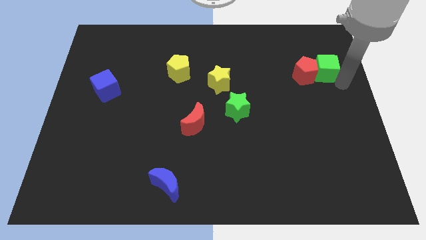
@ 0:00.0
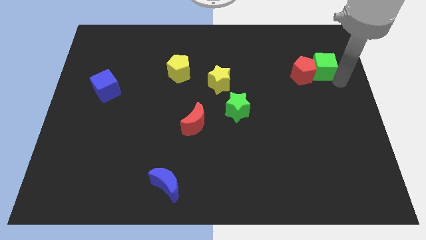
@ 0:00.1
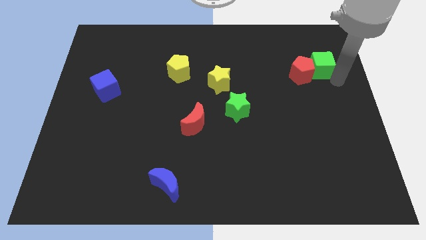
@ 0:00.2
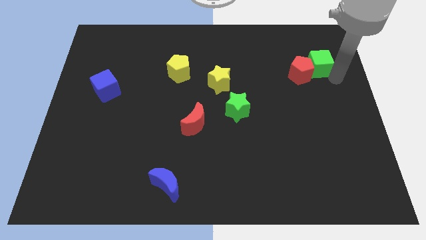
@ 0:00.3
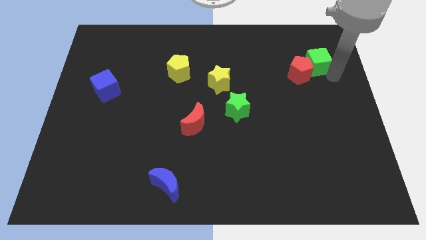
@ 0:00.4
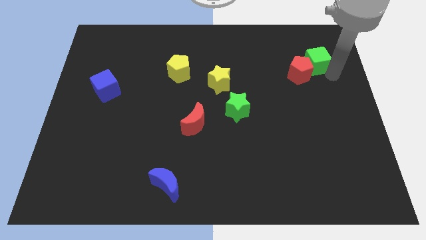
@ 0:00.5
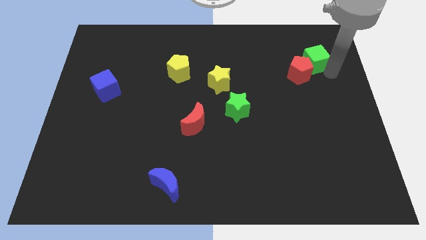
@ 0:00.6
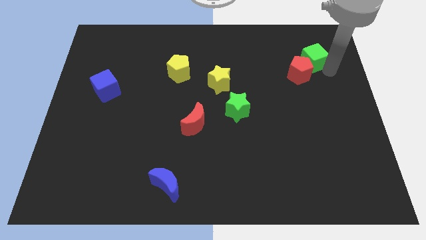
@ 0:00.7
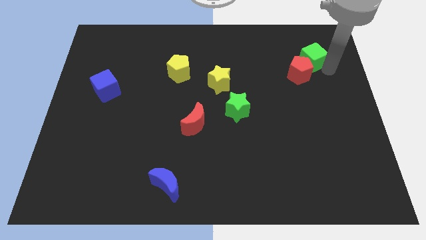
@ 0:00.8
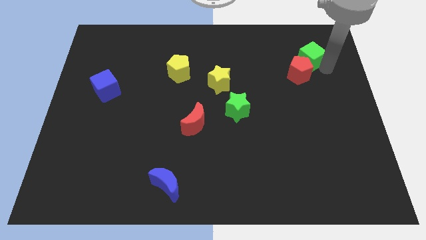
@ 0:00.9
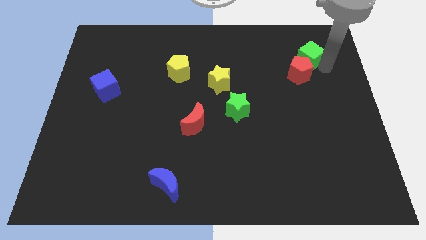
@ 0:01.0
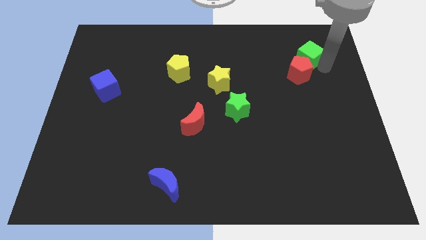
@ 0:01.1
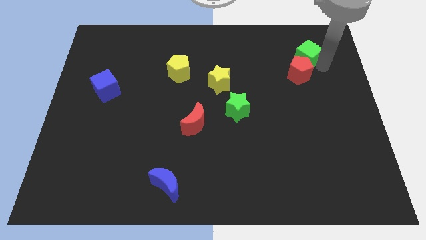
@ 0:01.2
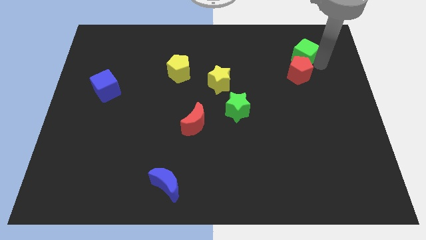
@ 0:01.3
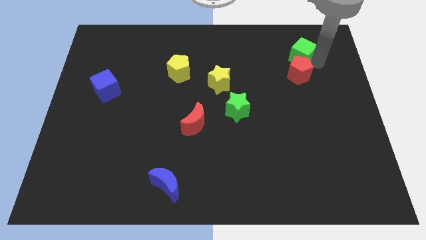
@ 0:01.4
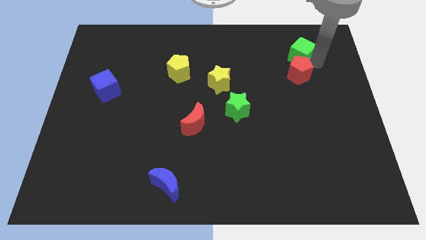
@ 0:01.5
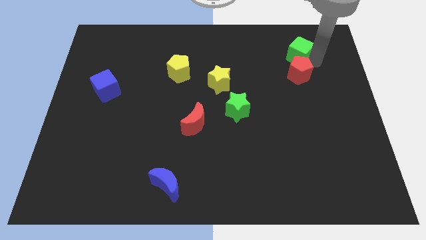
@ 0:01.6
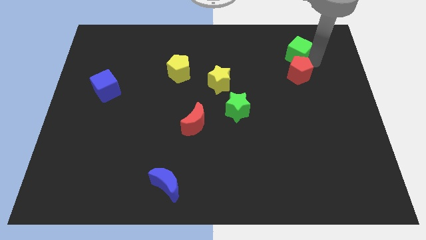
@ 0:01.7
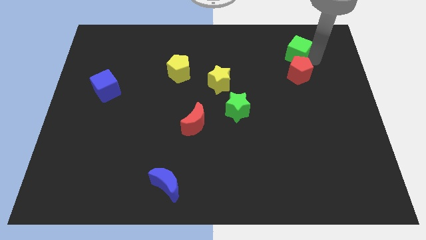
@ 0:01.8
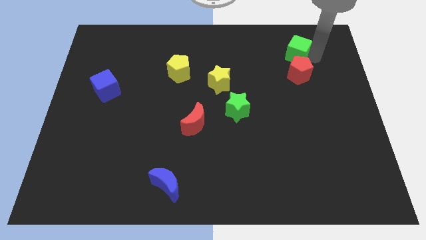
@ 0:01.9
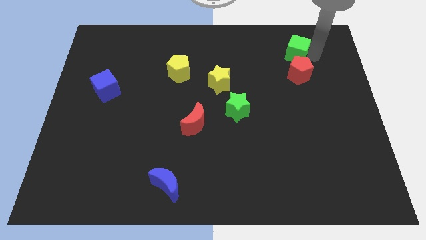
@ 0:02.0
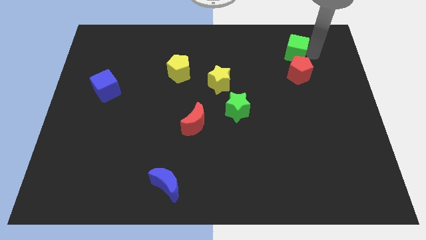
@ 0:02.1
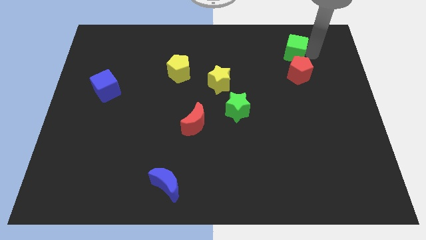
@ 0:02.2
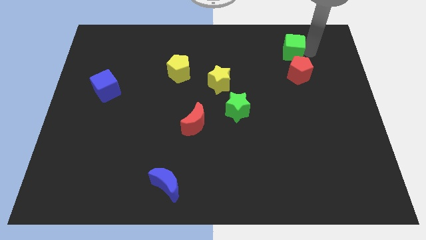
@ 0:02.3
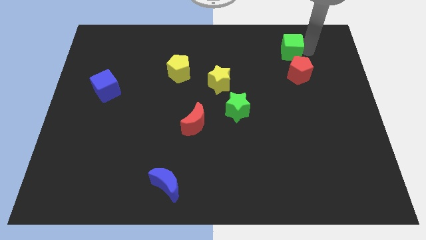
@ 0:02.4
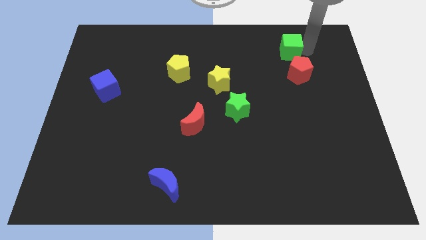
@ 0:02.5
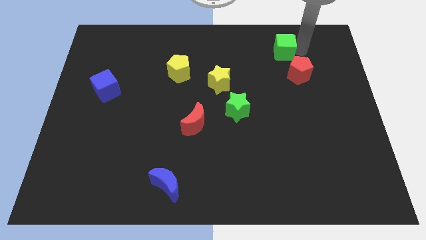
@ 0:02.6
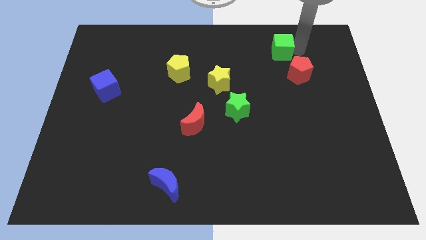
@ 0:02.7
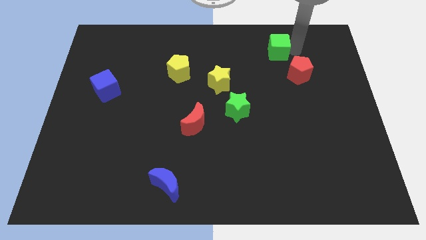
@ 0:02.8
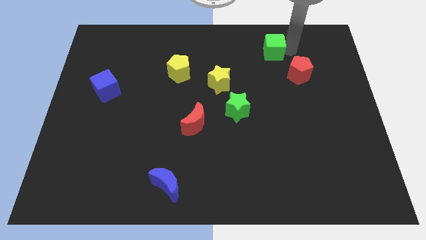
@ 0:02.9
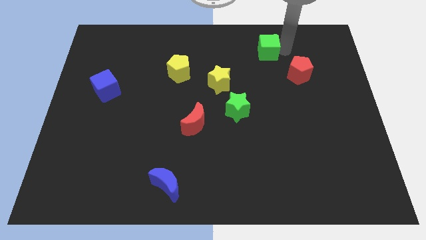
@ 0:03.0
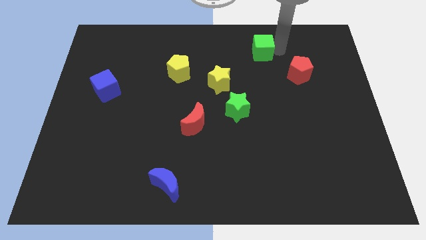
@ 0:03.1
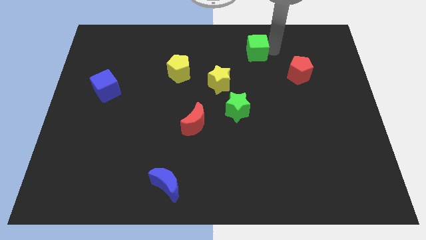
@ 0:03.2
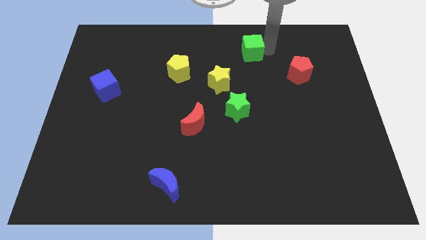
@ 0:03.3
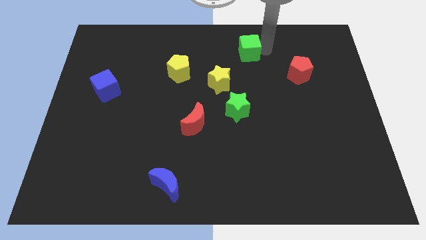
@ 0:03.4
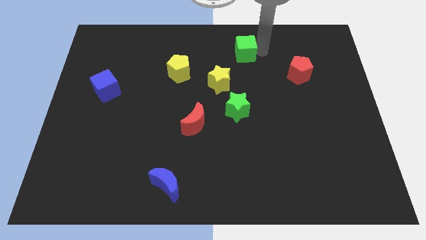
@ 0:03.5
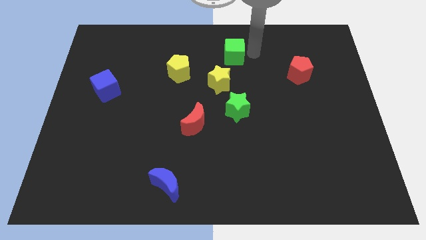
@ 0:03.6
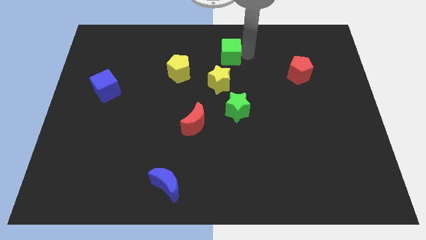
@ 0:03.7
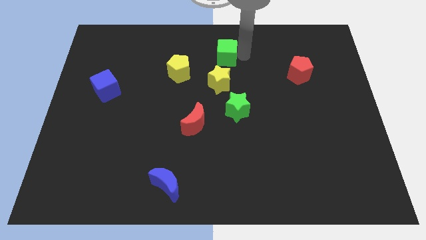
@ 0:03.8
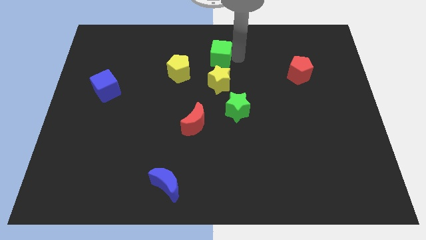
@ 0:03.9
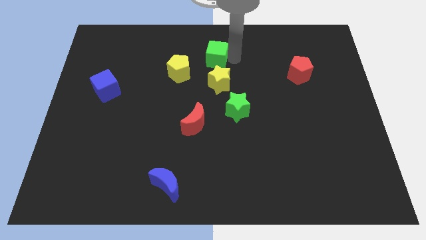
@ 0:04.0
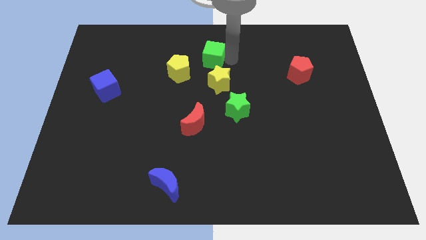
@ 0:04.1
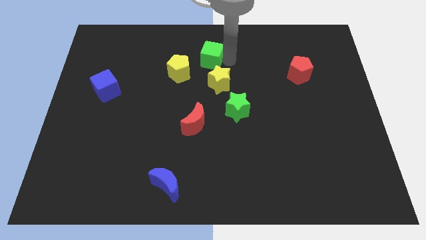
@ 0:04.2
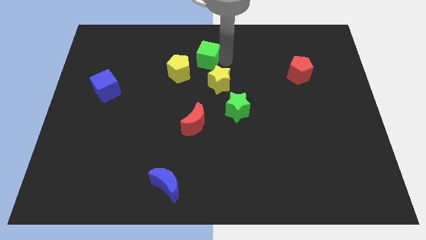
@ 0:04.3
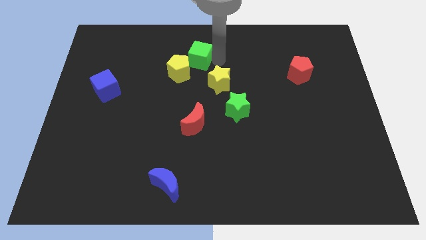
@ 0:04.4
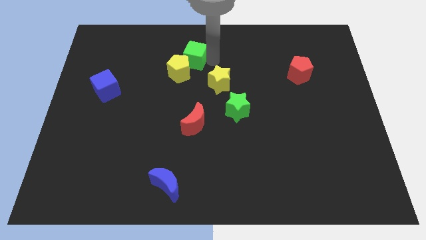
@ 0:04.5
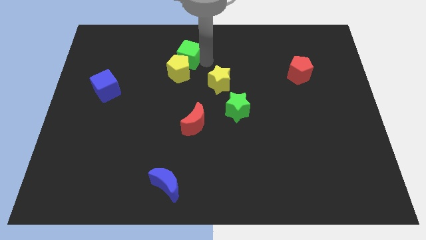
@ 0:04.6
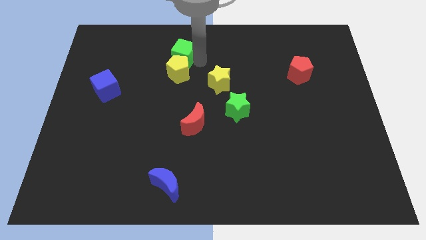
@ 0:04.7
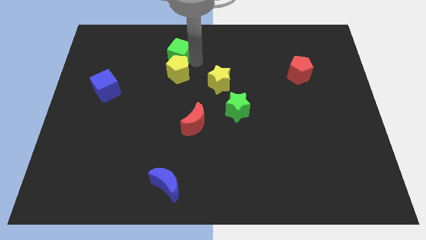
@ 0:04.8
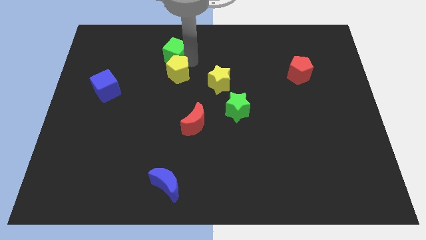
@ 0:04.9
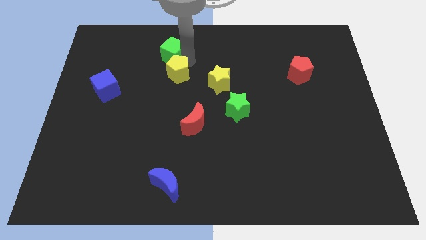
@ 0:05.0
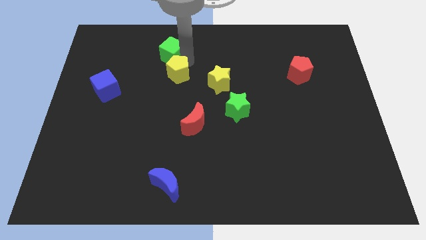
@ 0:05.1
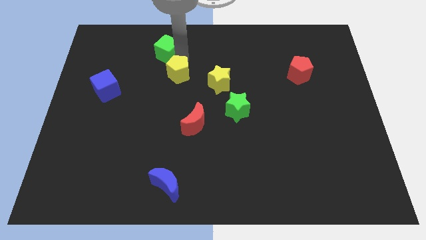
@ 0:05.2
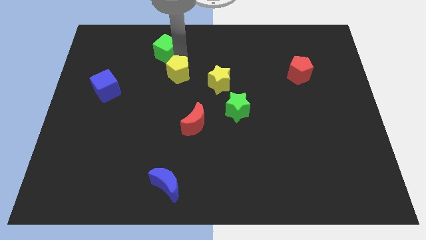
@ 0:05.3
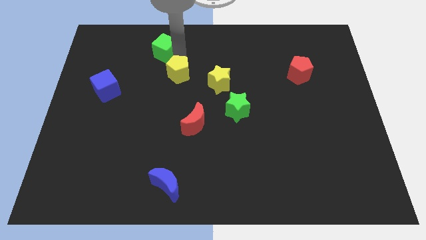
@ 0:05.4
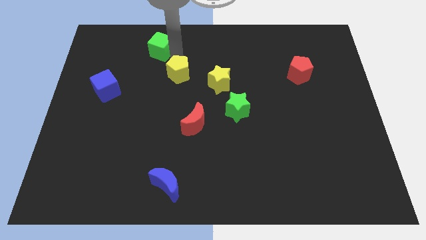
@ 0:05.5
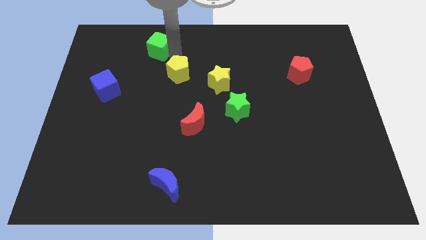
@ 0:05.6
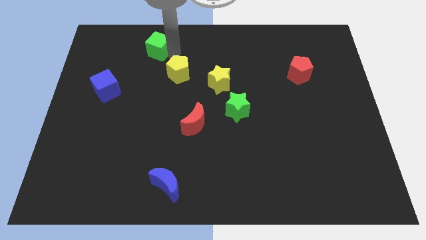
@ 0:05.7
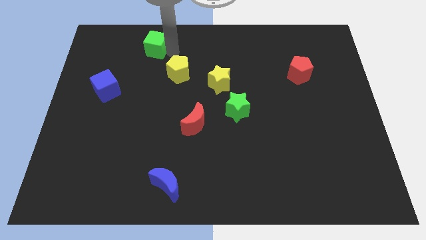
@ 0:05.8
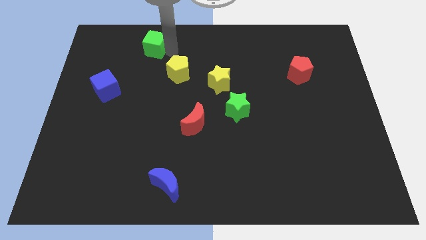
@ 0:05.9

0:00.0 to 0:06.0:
move the green cube to the top left of the table

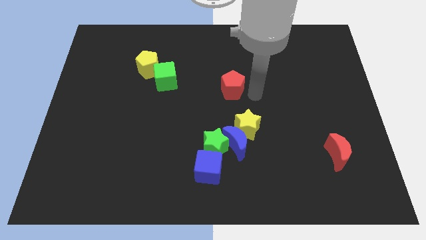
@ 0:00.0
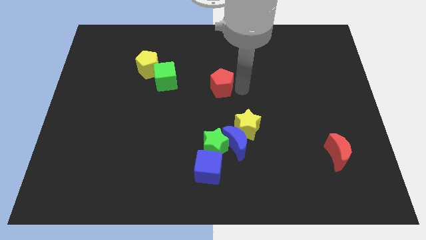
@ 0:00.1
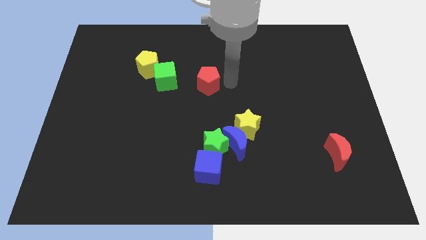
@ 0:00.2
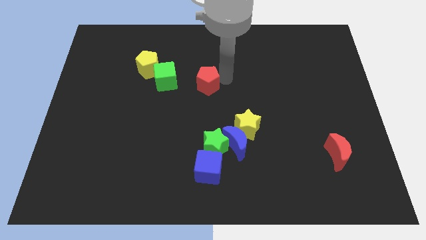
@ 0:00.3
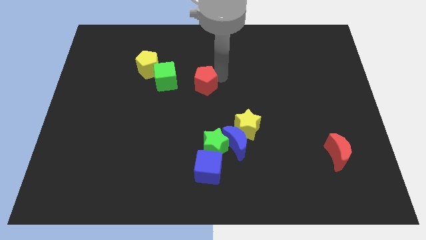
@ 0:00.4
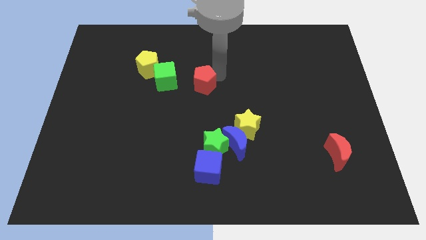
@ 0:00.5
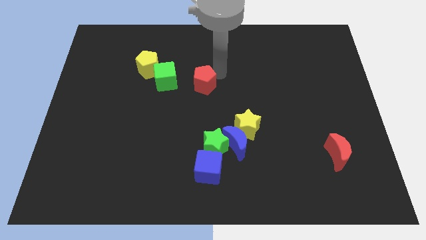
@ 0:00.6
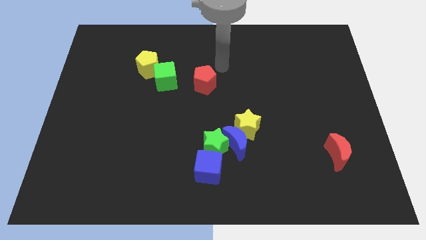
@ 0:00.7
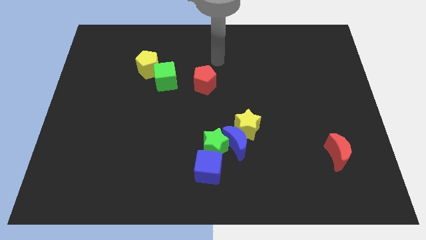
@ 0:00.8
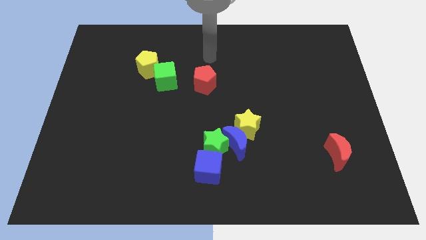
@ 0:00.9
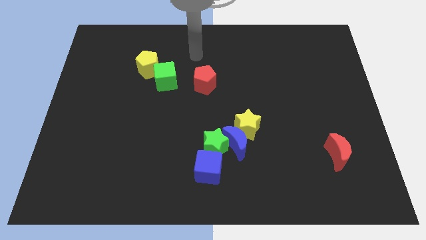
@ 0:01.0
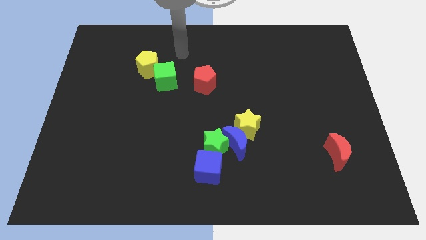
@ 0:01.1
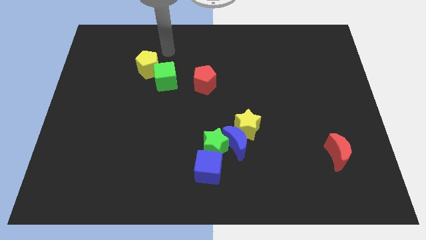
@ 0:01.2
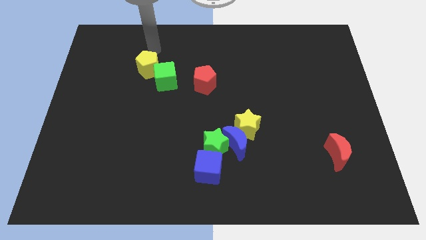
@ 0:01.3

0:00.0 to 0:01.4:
place red pentagon to the right of green cube

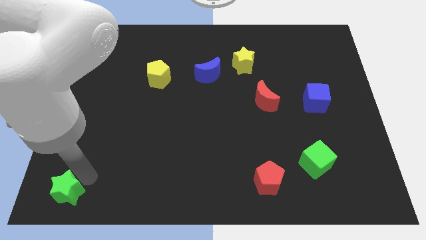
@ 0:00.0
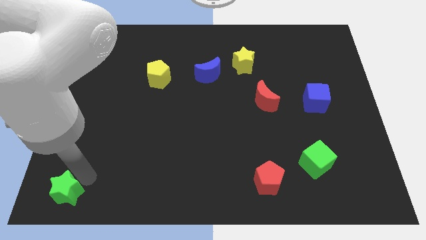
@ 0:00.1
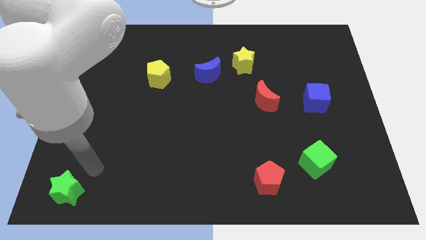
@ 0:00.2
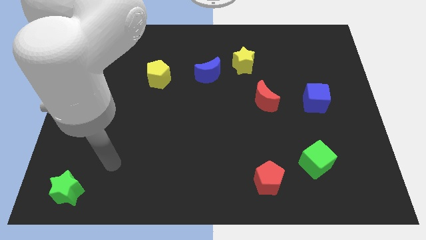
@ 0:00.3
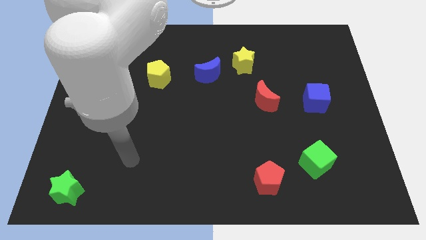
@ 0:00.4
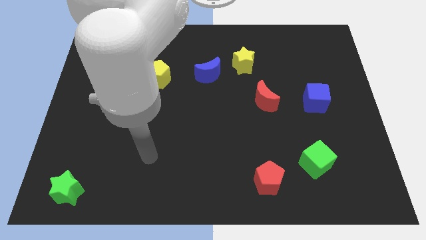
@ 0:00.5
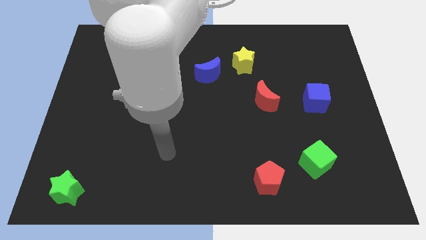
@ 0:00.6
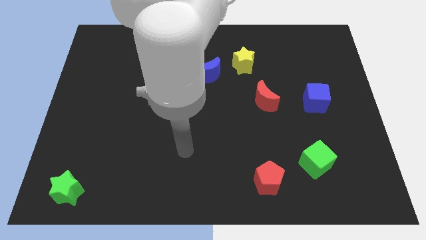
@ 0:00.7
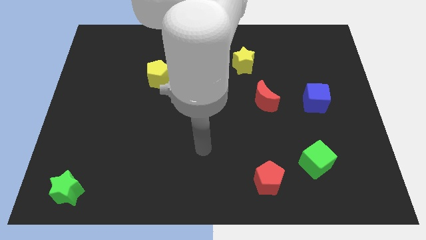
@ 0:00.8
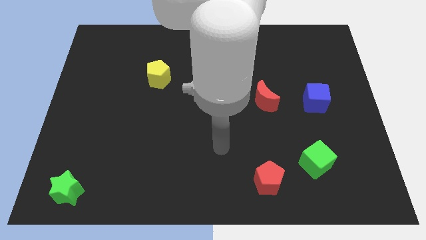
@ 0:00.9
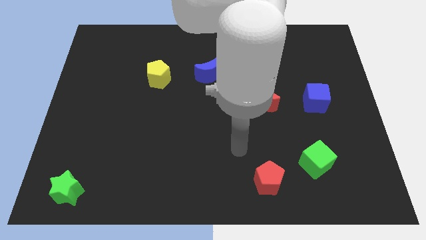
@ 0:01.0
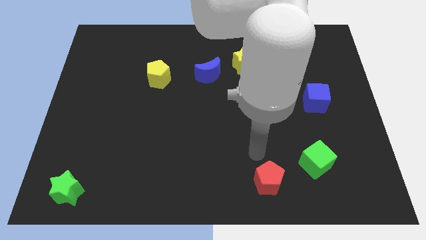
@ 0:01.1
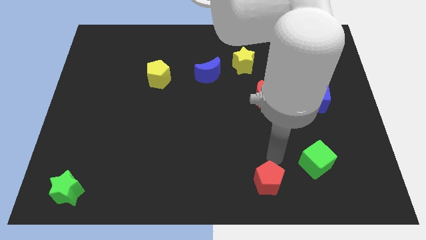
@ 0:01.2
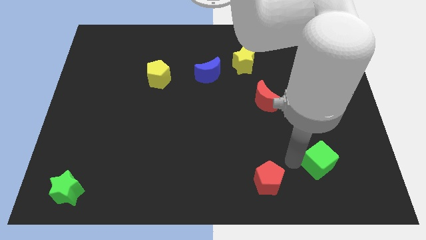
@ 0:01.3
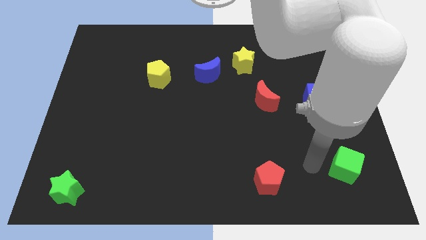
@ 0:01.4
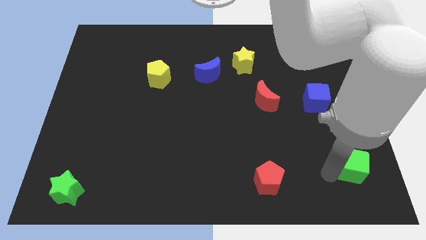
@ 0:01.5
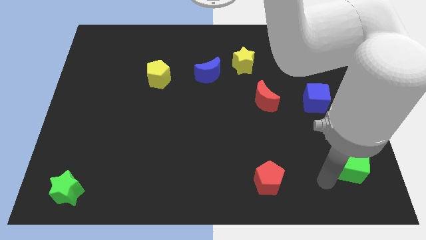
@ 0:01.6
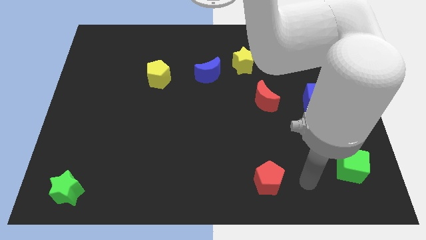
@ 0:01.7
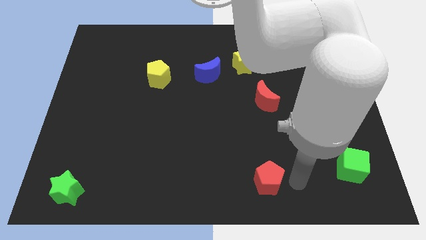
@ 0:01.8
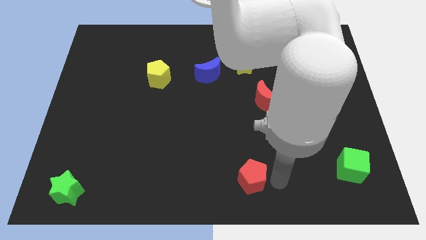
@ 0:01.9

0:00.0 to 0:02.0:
slightly push the green cube towards the right
